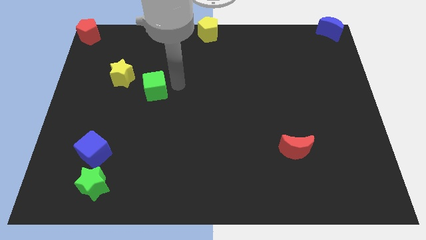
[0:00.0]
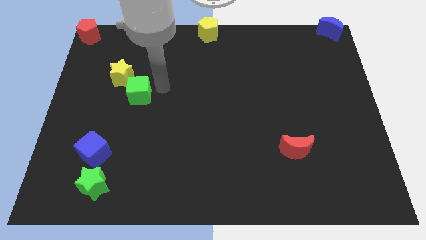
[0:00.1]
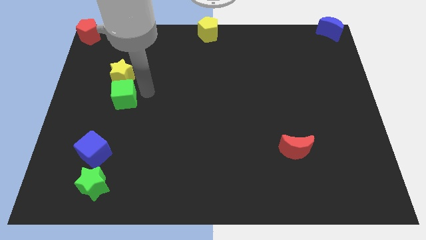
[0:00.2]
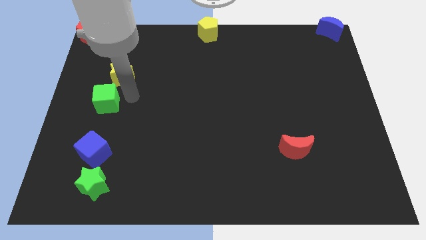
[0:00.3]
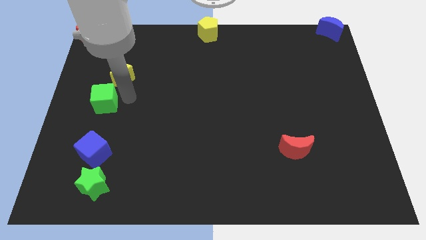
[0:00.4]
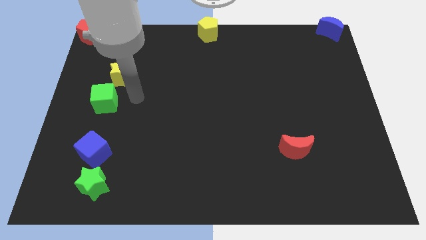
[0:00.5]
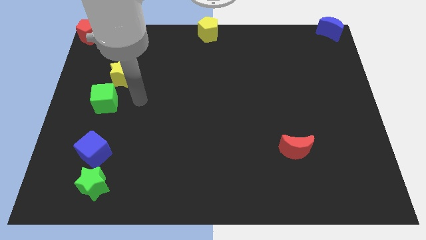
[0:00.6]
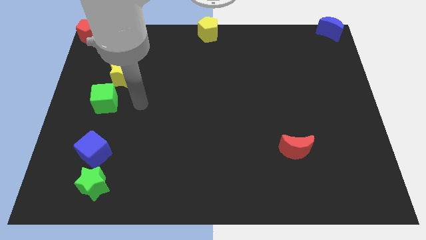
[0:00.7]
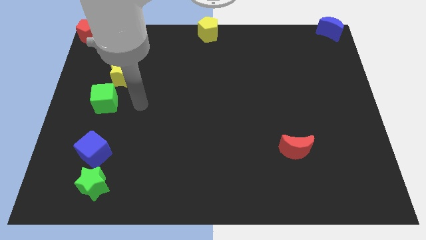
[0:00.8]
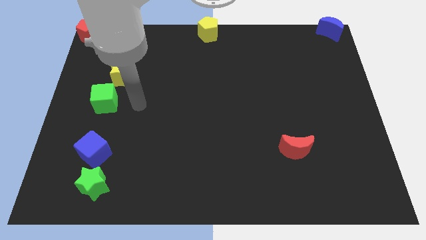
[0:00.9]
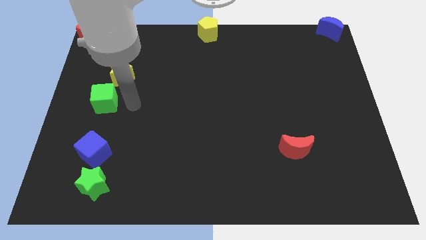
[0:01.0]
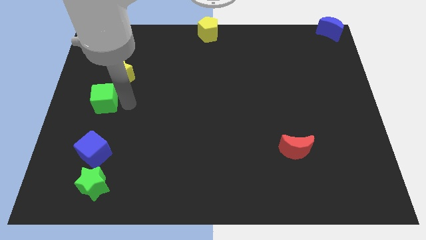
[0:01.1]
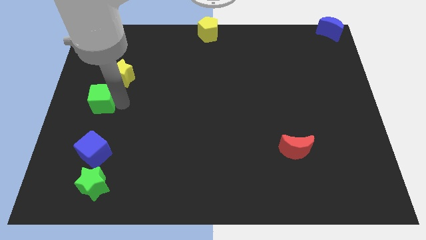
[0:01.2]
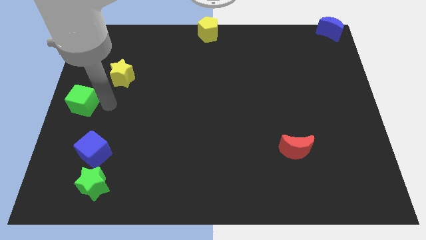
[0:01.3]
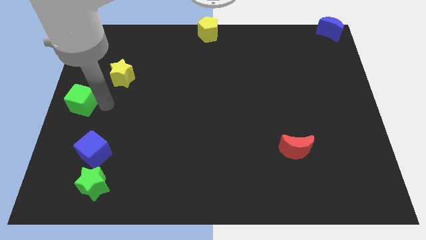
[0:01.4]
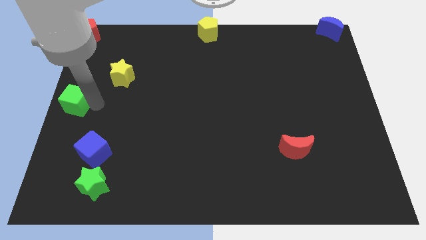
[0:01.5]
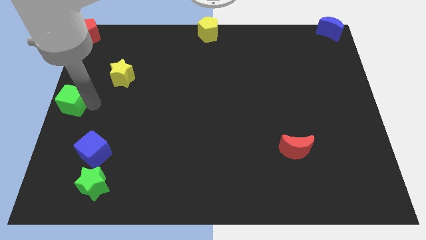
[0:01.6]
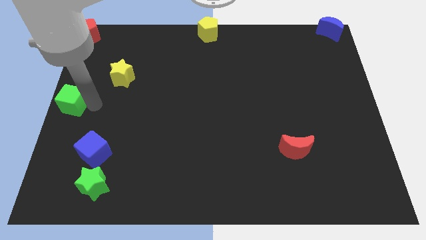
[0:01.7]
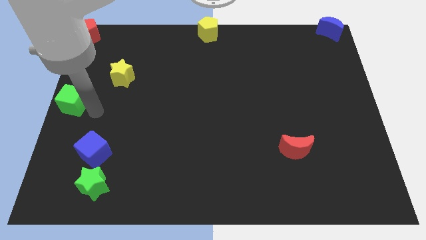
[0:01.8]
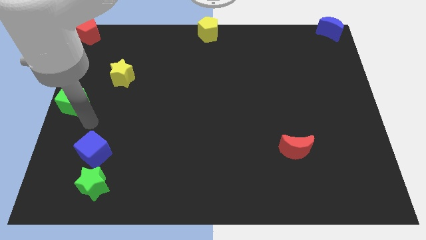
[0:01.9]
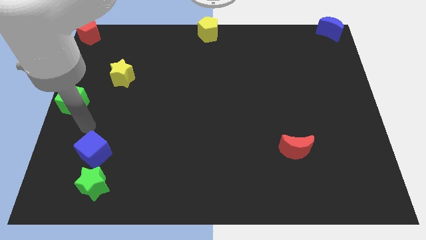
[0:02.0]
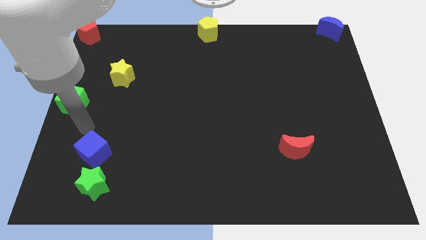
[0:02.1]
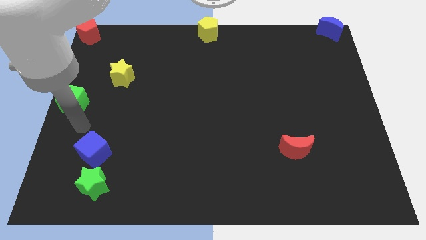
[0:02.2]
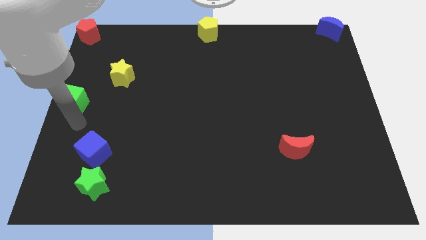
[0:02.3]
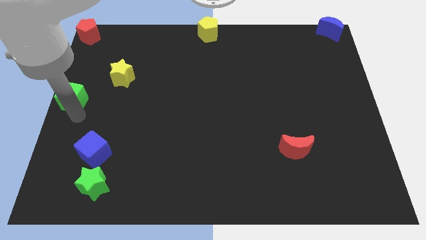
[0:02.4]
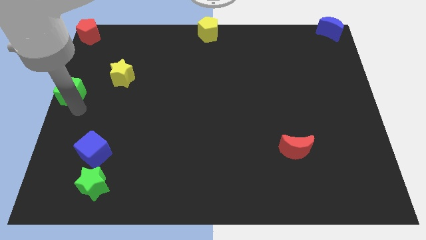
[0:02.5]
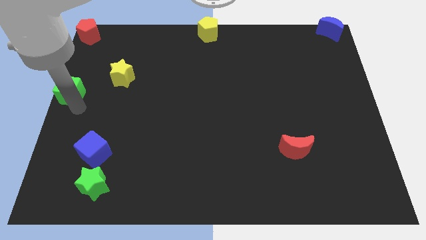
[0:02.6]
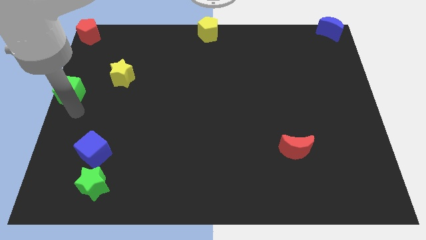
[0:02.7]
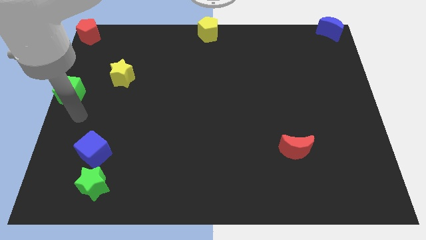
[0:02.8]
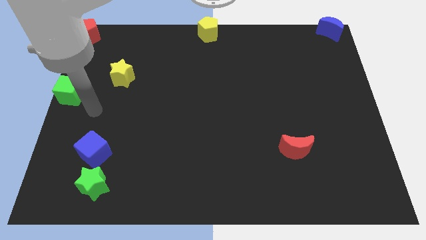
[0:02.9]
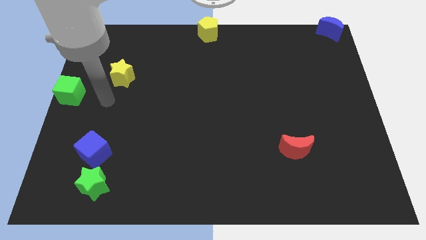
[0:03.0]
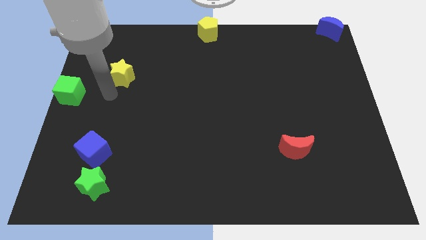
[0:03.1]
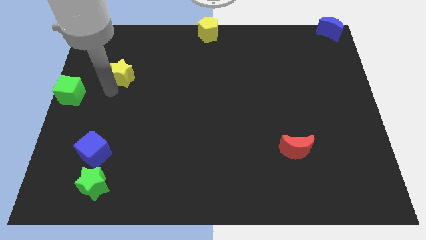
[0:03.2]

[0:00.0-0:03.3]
place the green cube diagonally on the top left side of blue cube

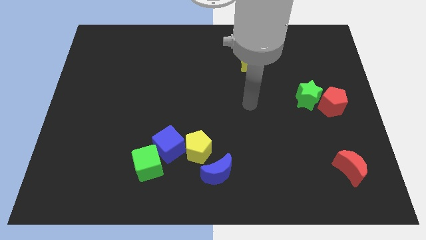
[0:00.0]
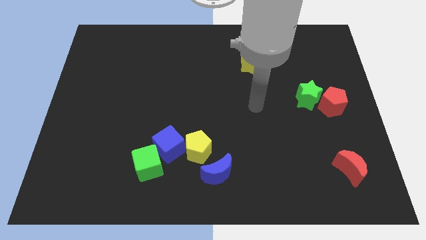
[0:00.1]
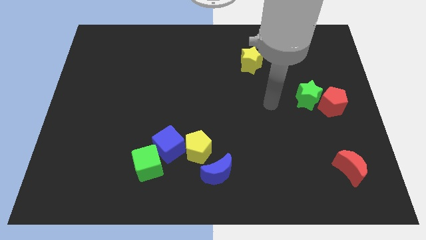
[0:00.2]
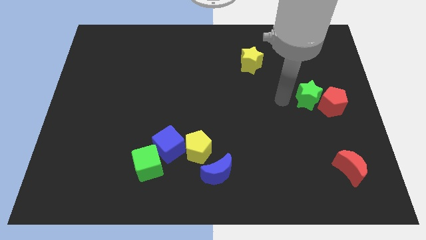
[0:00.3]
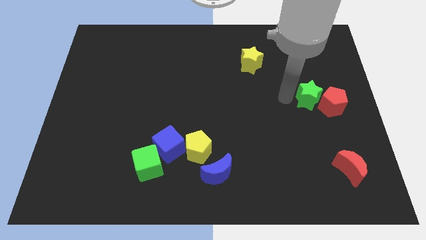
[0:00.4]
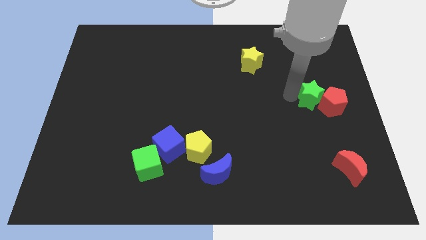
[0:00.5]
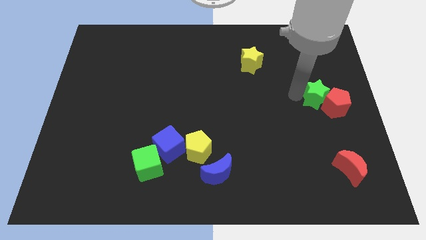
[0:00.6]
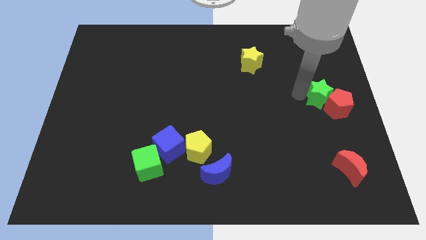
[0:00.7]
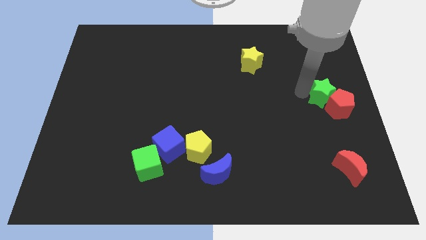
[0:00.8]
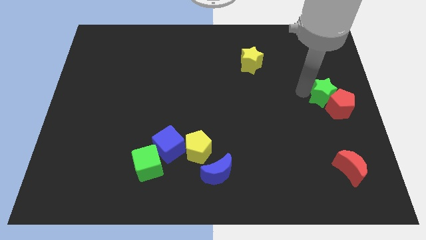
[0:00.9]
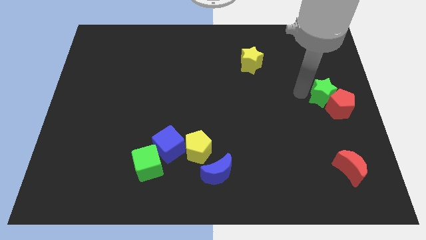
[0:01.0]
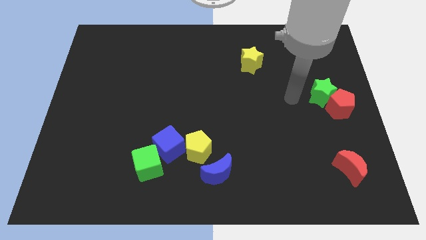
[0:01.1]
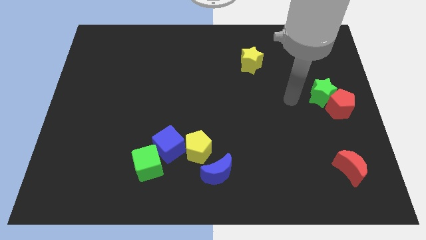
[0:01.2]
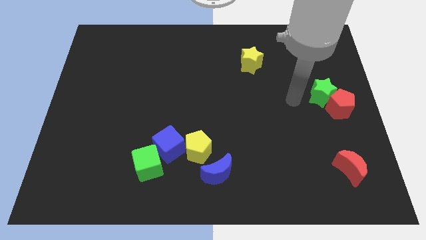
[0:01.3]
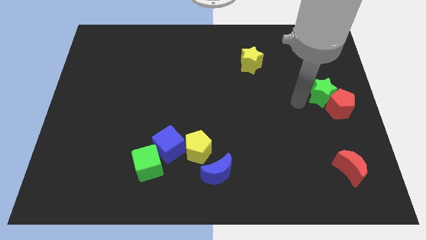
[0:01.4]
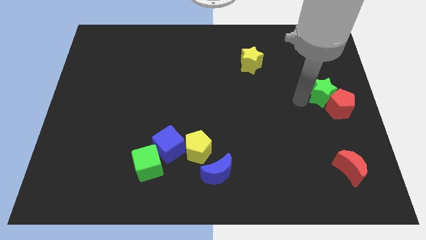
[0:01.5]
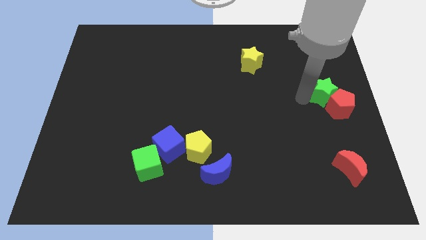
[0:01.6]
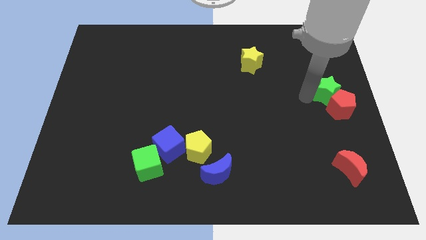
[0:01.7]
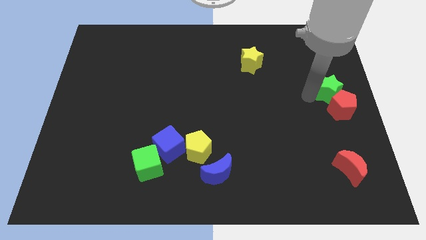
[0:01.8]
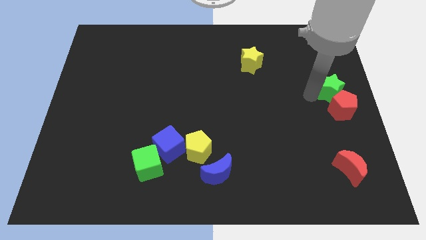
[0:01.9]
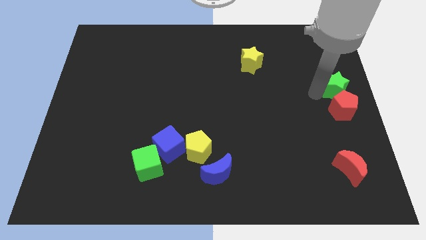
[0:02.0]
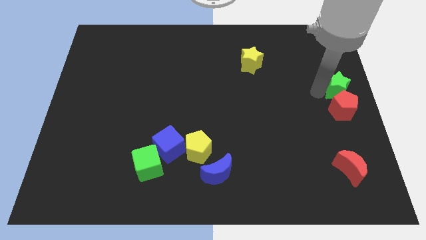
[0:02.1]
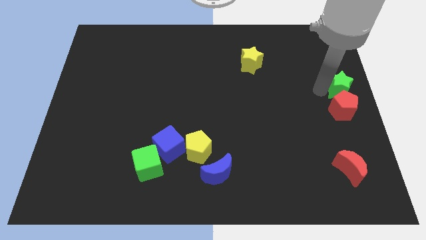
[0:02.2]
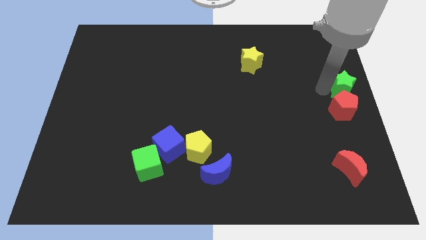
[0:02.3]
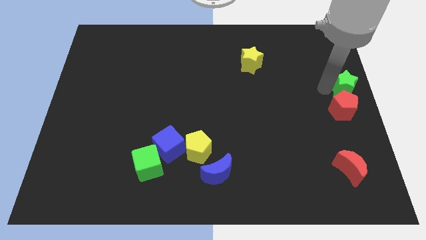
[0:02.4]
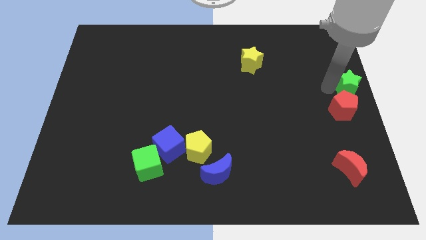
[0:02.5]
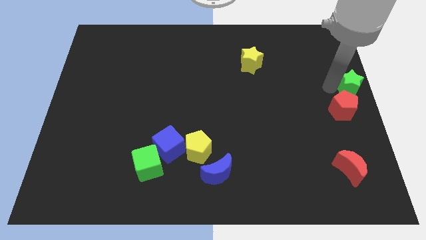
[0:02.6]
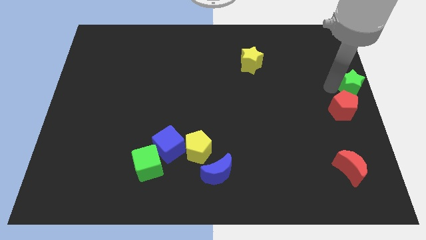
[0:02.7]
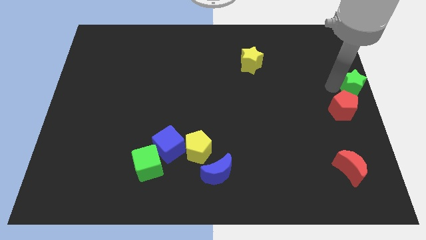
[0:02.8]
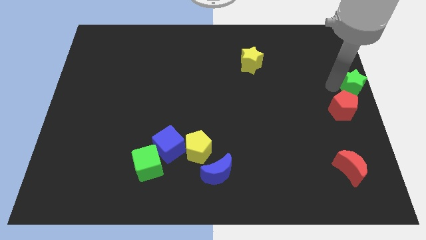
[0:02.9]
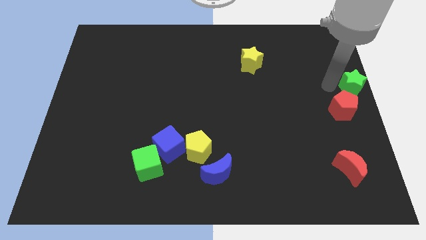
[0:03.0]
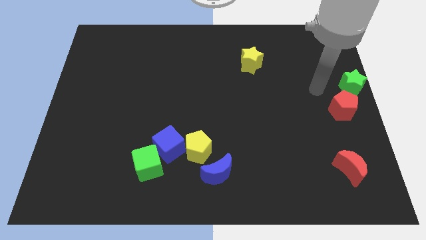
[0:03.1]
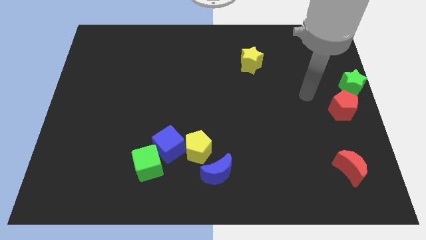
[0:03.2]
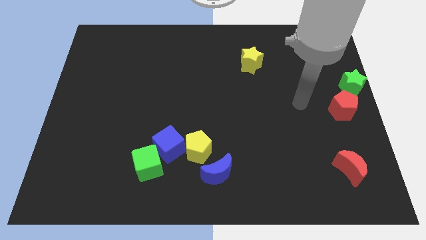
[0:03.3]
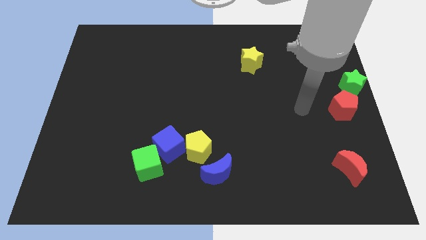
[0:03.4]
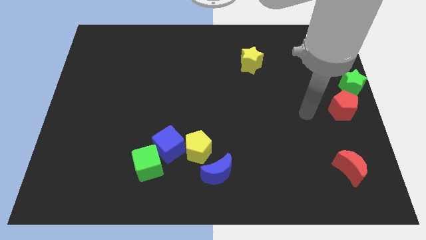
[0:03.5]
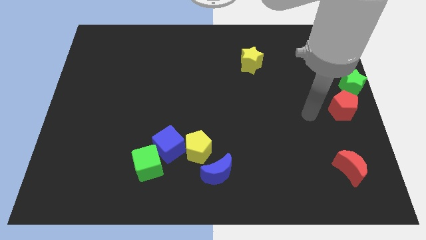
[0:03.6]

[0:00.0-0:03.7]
push the green star to the right center of the board

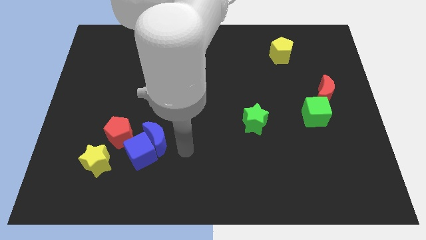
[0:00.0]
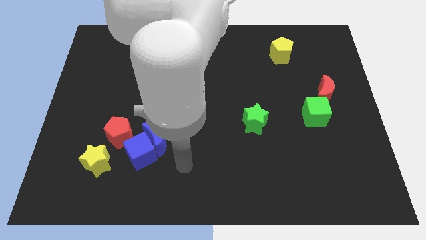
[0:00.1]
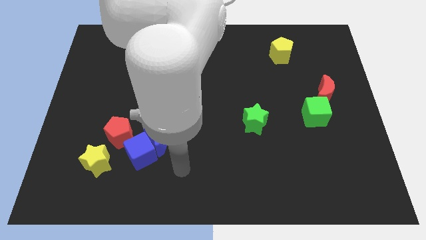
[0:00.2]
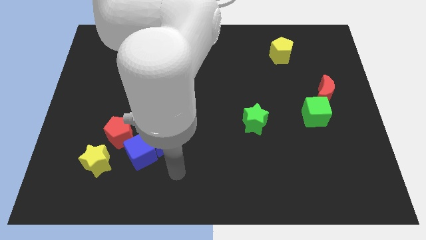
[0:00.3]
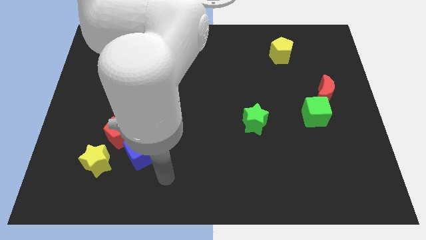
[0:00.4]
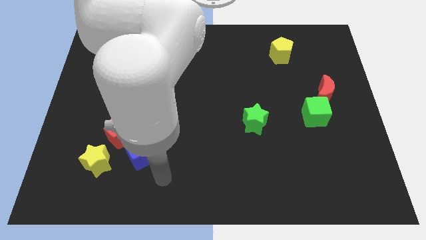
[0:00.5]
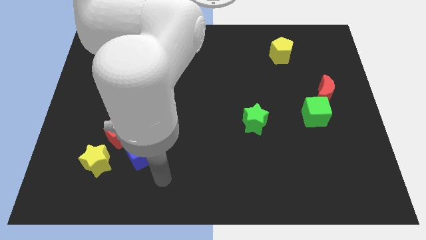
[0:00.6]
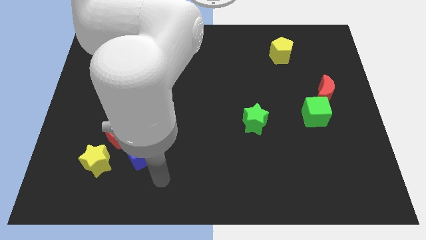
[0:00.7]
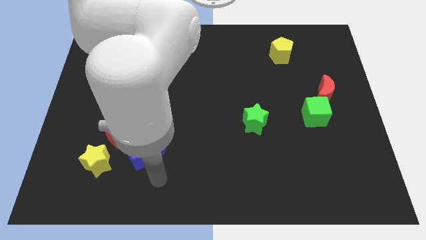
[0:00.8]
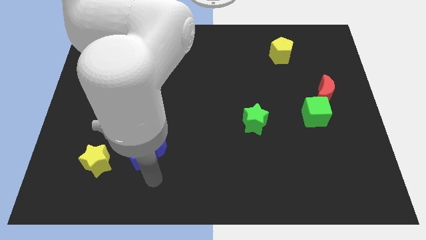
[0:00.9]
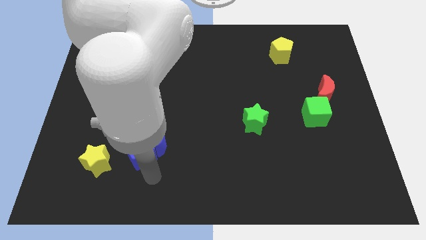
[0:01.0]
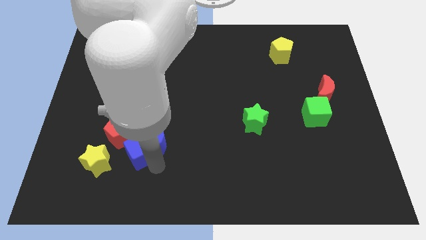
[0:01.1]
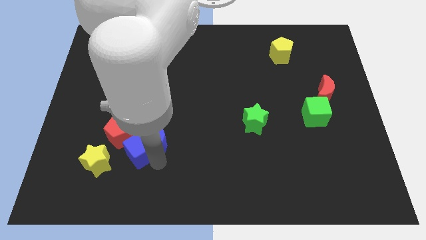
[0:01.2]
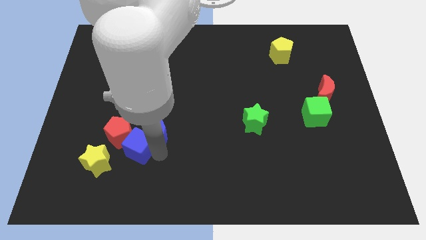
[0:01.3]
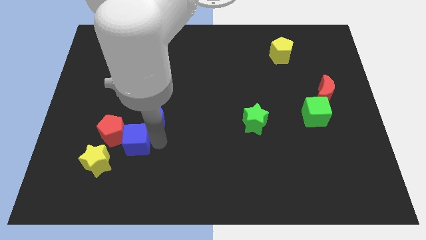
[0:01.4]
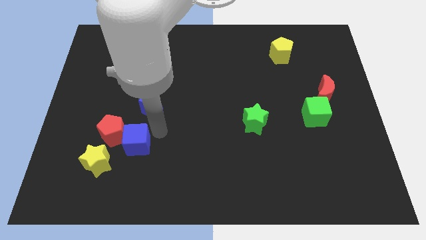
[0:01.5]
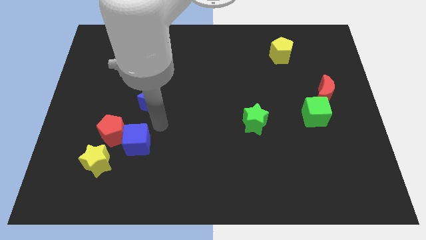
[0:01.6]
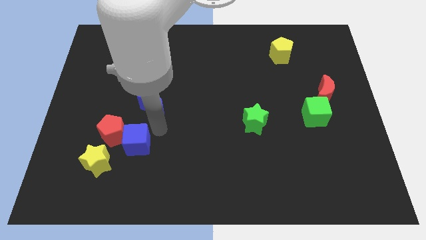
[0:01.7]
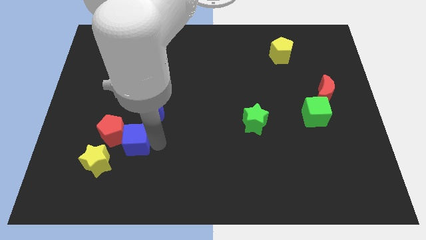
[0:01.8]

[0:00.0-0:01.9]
move blue moon slightly up
